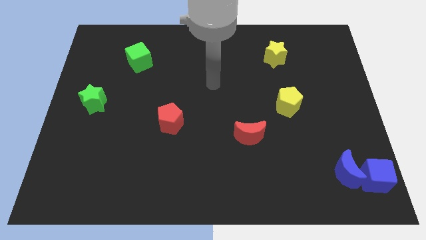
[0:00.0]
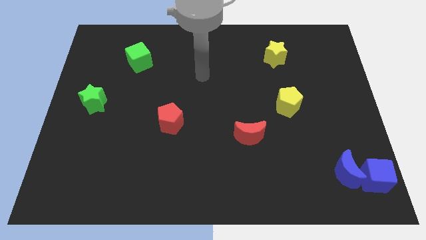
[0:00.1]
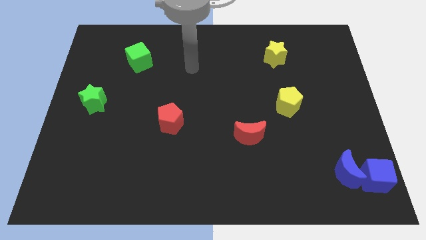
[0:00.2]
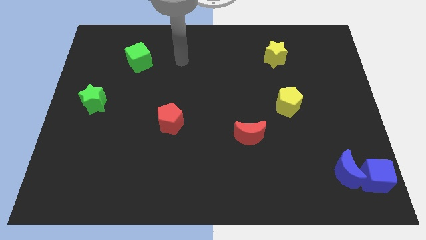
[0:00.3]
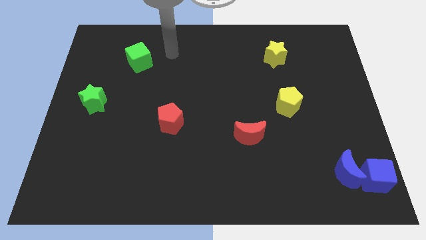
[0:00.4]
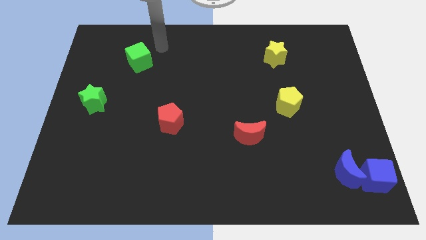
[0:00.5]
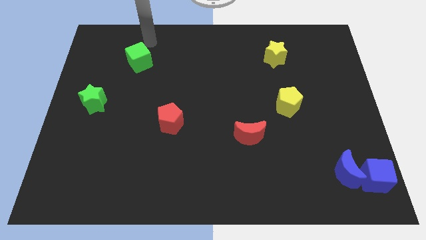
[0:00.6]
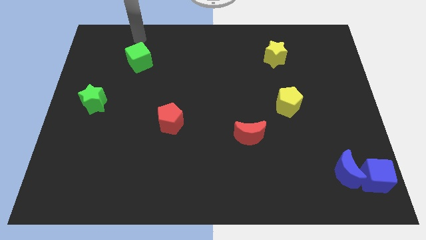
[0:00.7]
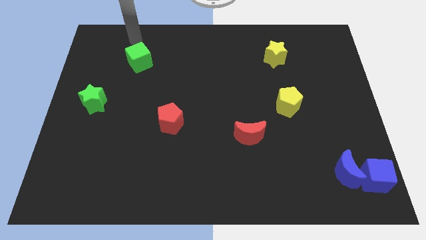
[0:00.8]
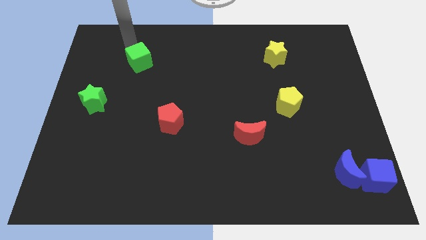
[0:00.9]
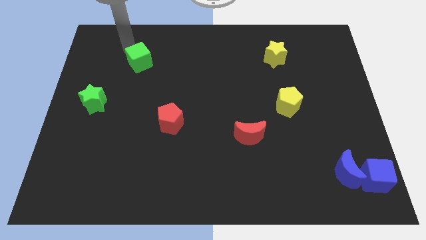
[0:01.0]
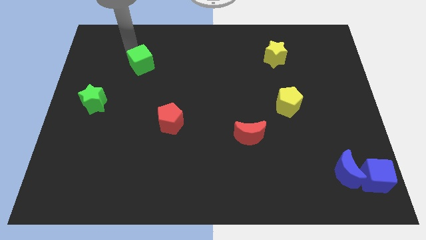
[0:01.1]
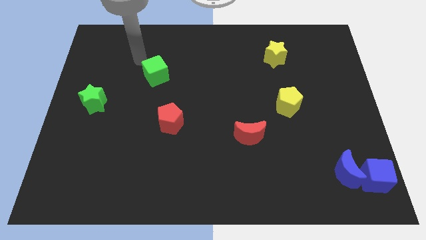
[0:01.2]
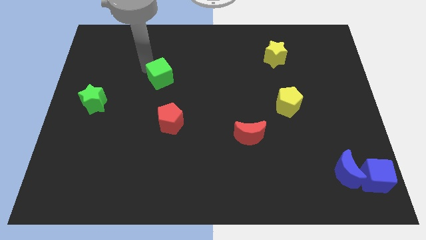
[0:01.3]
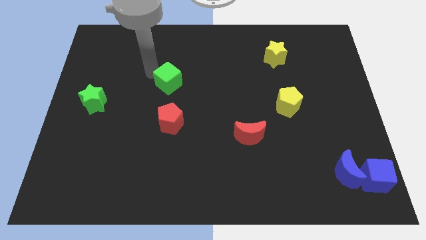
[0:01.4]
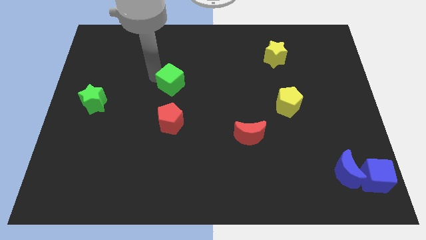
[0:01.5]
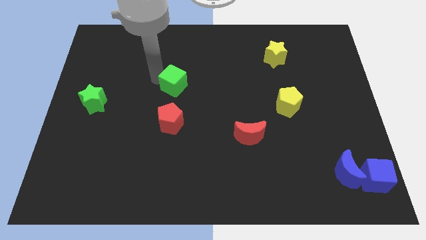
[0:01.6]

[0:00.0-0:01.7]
move the green cube above the red pentagon

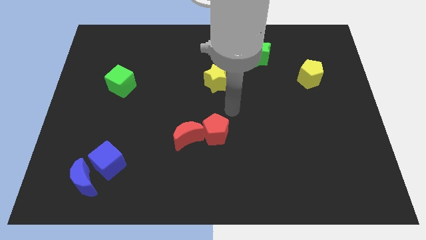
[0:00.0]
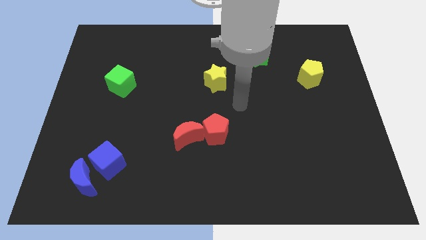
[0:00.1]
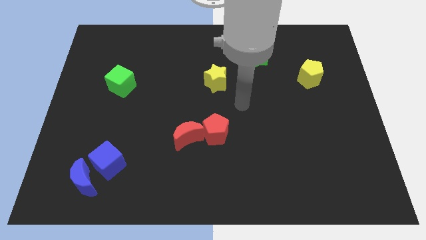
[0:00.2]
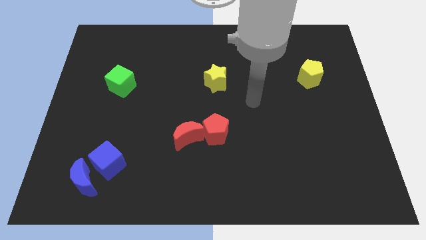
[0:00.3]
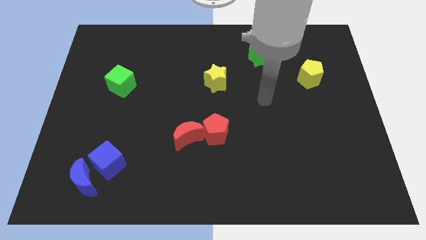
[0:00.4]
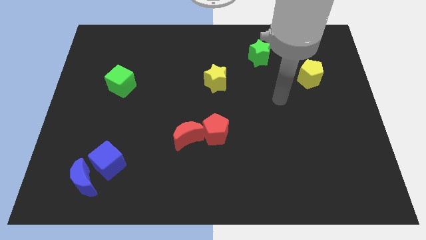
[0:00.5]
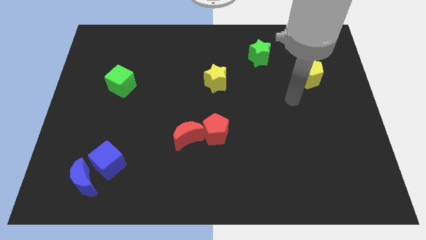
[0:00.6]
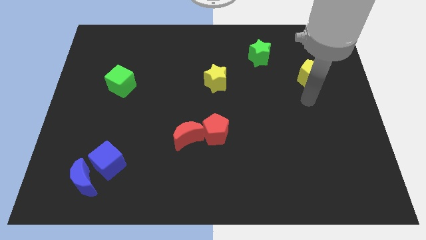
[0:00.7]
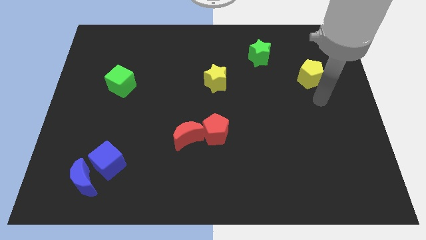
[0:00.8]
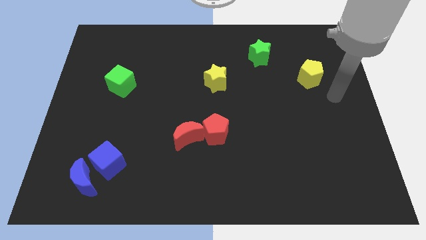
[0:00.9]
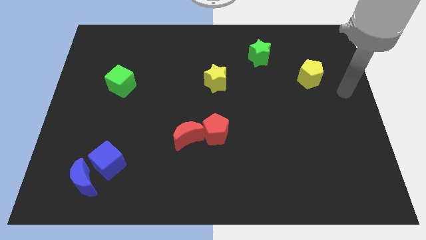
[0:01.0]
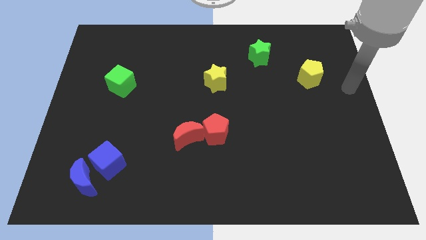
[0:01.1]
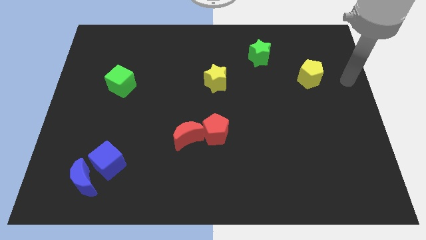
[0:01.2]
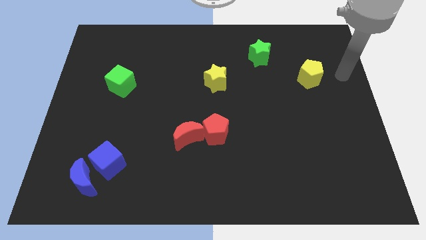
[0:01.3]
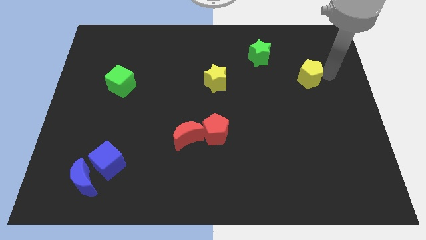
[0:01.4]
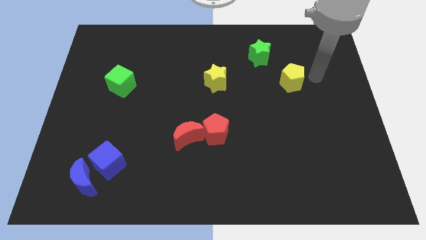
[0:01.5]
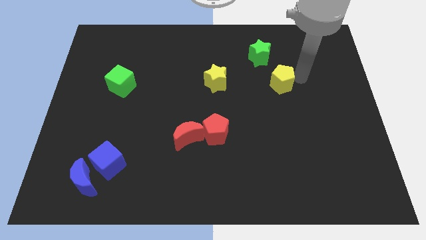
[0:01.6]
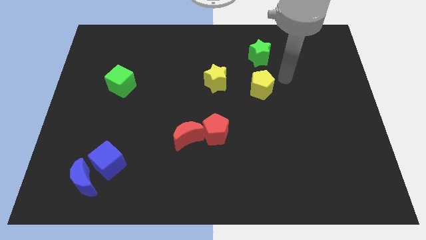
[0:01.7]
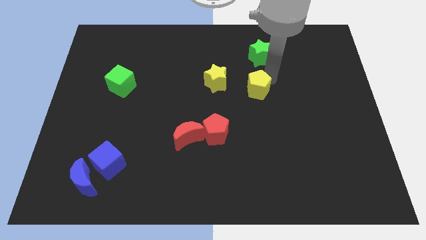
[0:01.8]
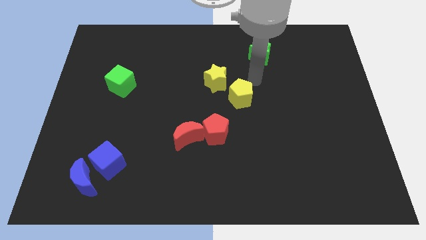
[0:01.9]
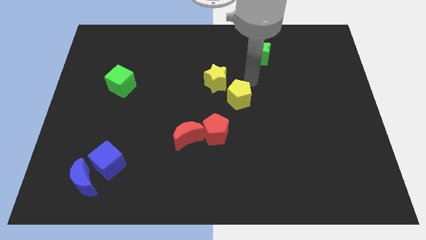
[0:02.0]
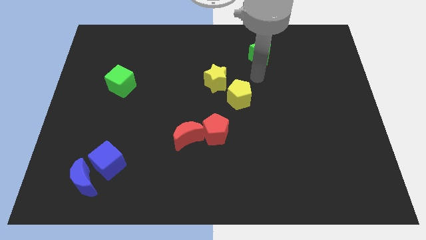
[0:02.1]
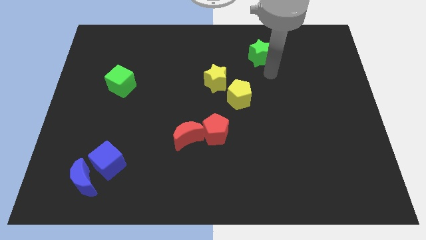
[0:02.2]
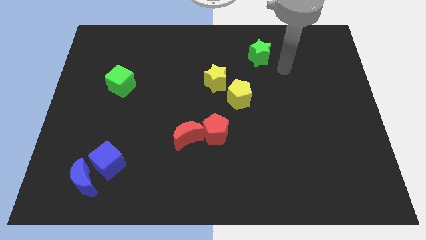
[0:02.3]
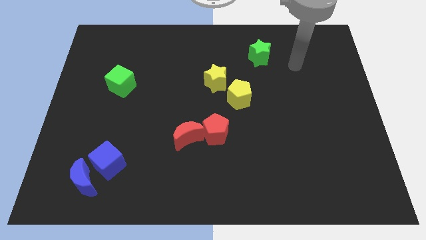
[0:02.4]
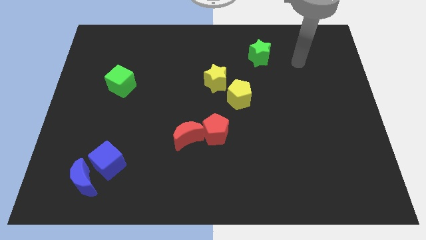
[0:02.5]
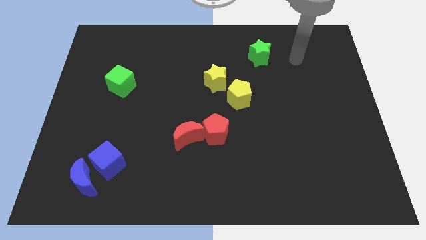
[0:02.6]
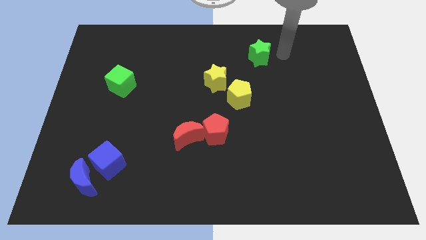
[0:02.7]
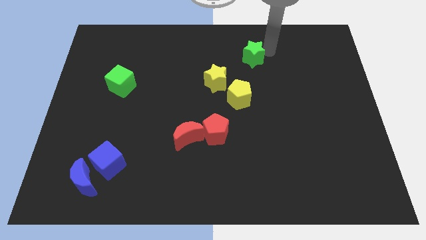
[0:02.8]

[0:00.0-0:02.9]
place the yellow pentagon to the right bottom of the yellow star

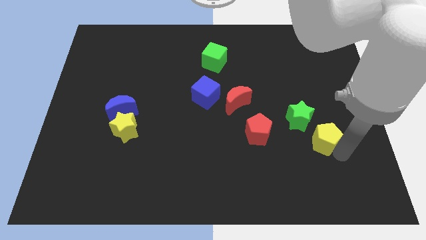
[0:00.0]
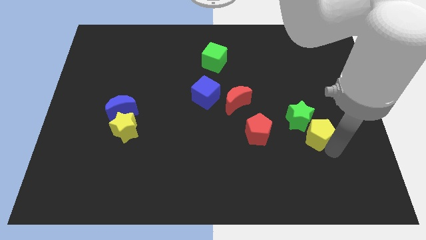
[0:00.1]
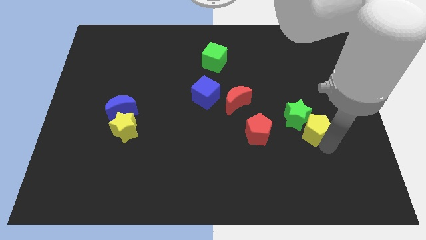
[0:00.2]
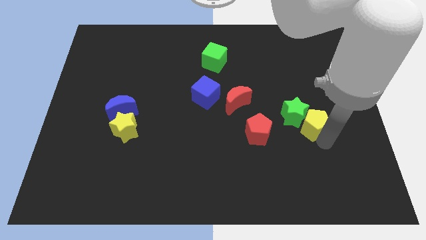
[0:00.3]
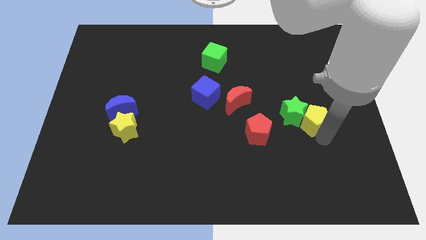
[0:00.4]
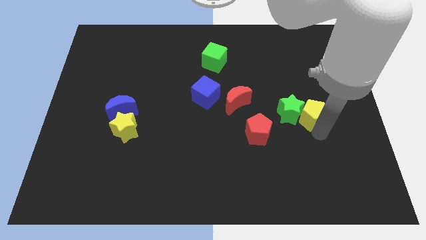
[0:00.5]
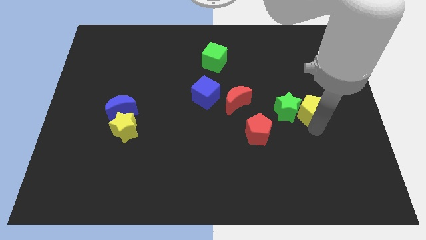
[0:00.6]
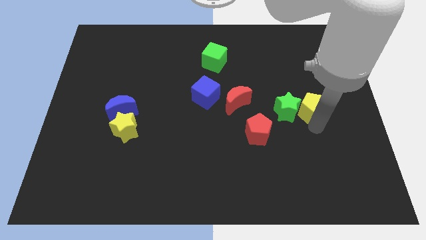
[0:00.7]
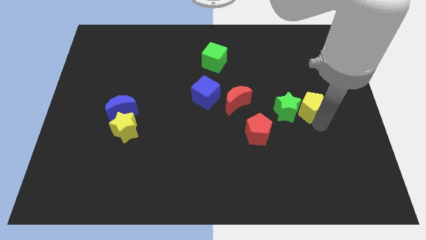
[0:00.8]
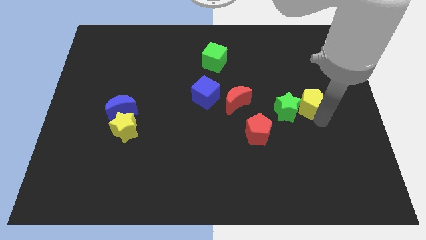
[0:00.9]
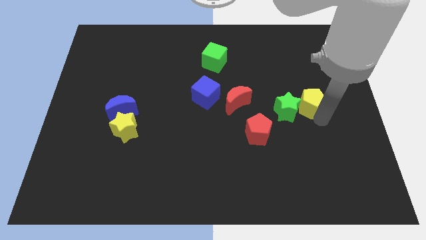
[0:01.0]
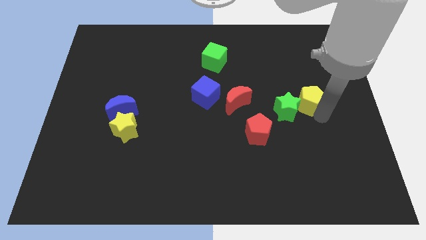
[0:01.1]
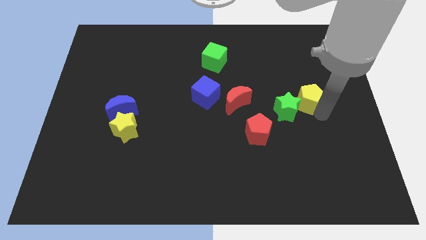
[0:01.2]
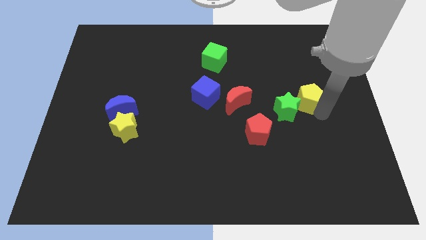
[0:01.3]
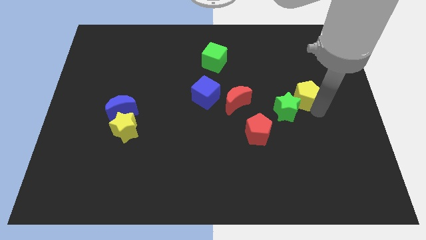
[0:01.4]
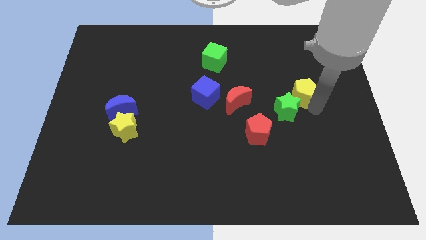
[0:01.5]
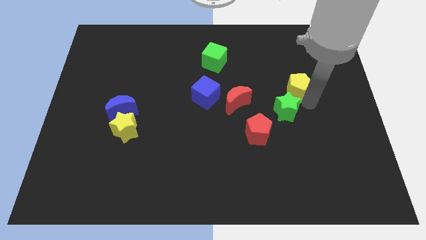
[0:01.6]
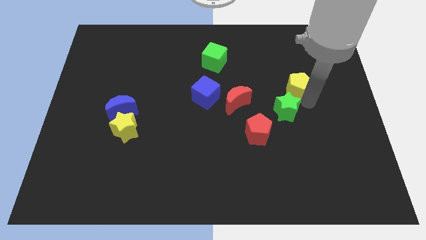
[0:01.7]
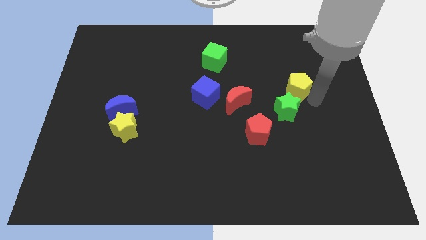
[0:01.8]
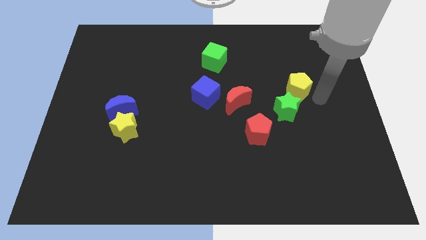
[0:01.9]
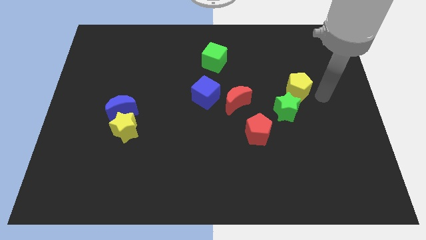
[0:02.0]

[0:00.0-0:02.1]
place the yellow pentagon above the green star

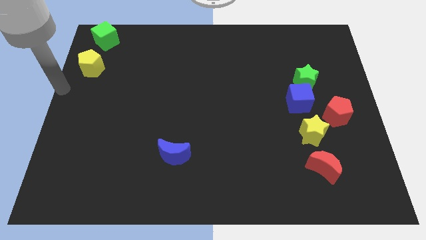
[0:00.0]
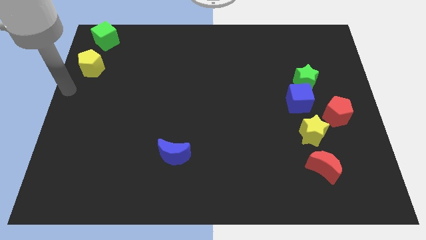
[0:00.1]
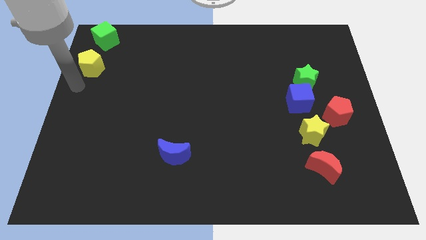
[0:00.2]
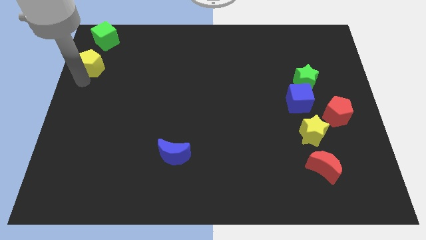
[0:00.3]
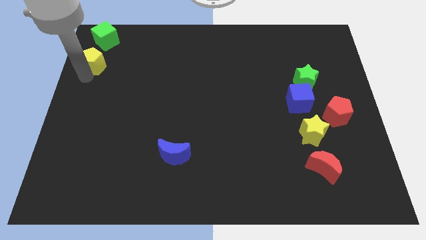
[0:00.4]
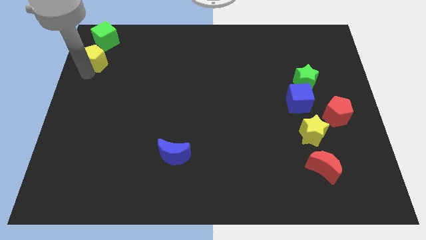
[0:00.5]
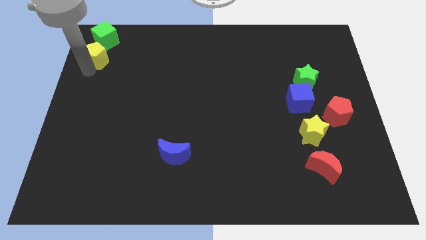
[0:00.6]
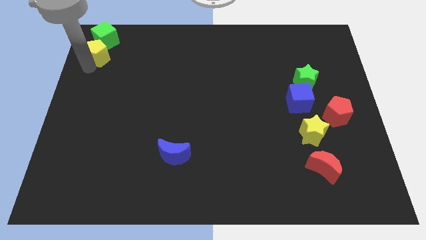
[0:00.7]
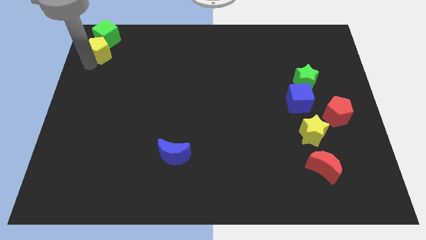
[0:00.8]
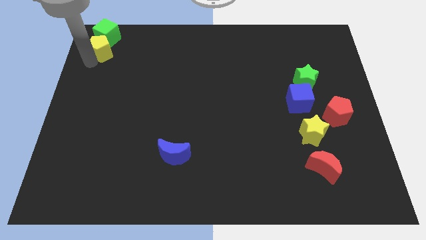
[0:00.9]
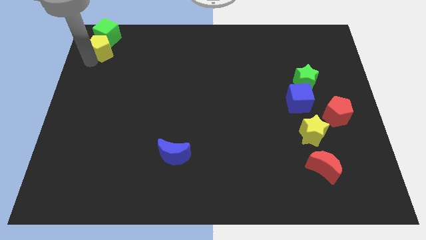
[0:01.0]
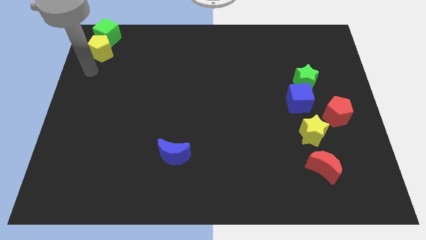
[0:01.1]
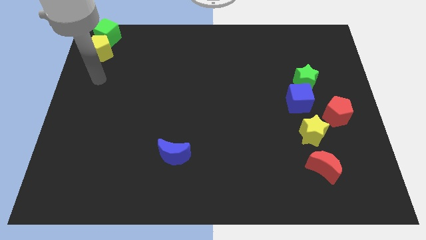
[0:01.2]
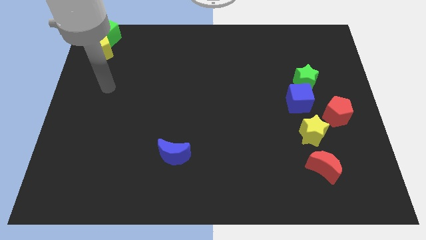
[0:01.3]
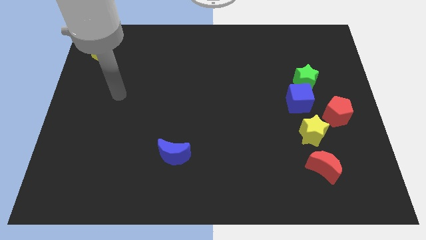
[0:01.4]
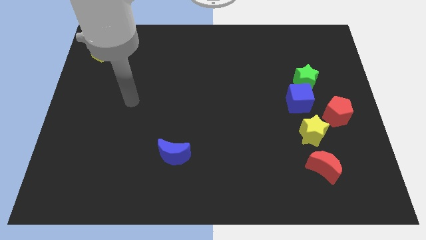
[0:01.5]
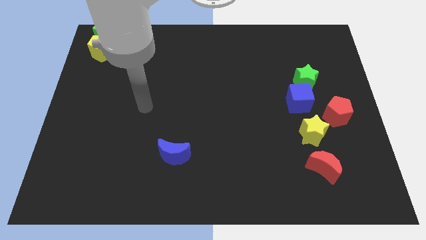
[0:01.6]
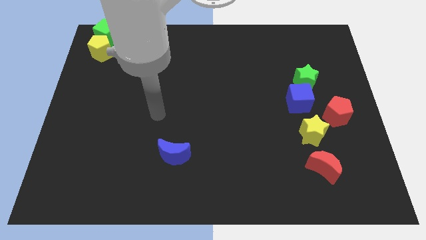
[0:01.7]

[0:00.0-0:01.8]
move the yellow pentagon below the green cube

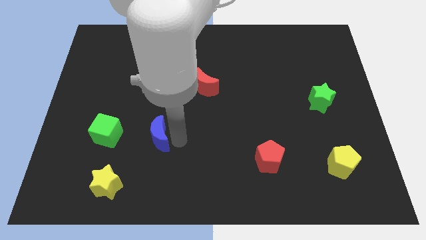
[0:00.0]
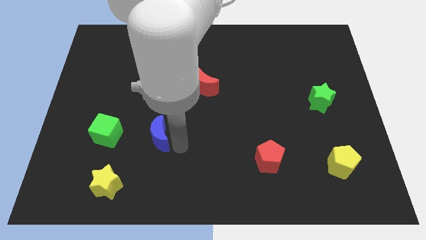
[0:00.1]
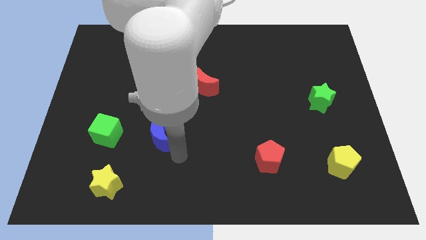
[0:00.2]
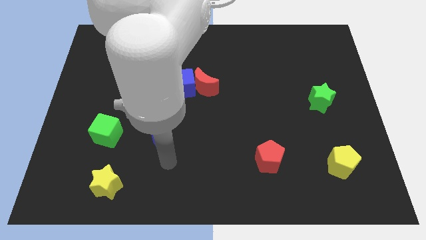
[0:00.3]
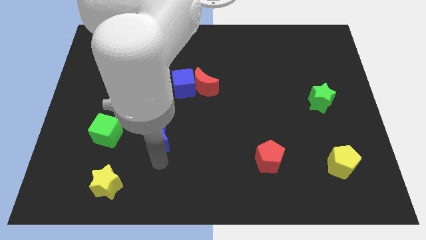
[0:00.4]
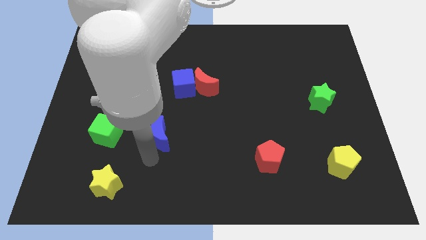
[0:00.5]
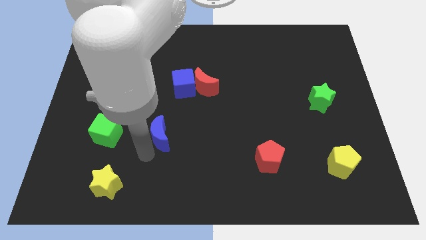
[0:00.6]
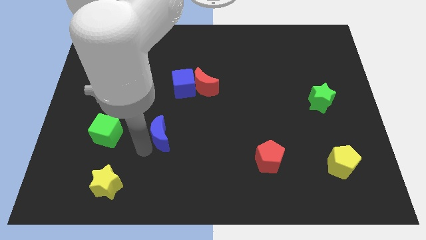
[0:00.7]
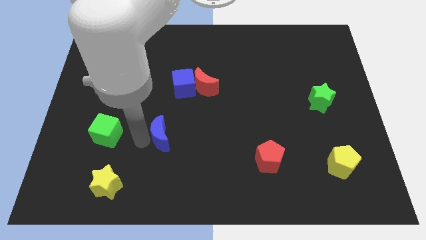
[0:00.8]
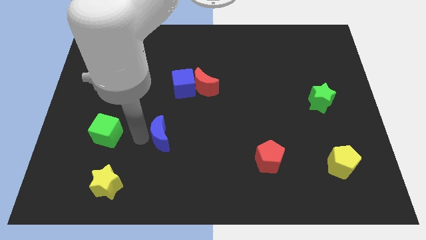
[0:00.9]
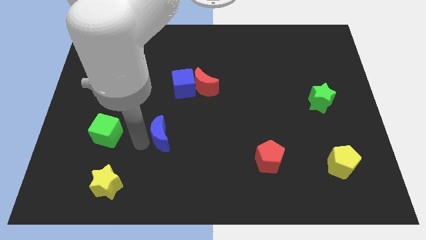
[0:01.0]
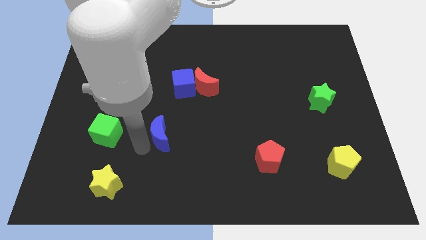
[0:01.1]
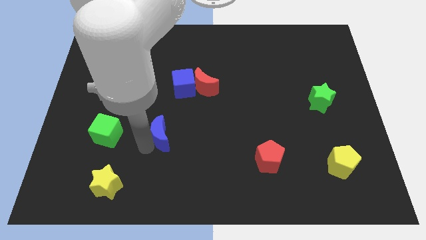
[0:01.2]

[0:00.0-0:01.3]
move your arm towards the left of the blue crescent
